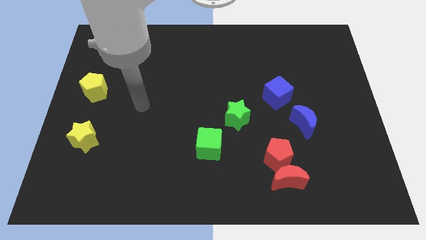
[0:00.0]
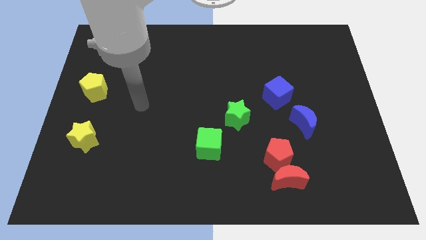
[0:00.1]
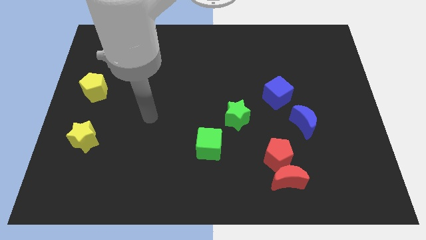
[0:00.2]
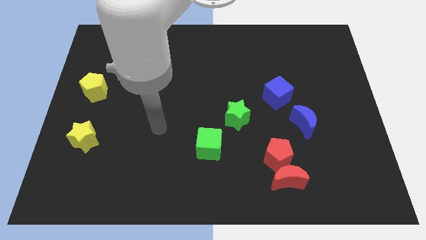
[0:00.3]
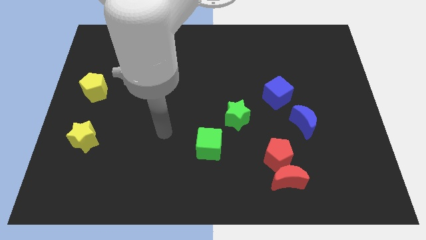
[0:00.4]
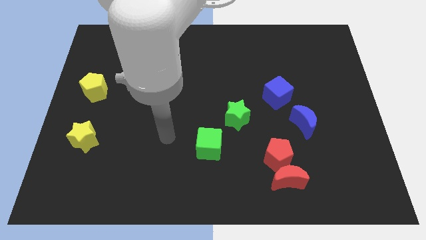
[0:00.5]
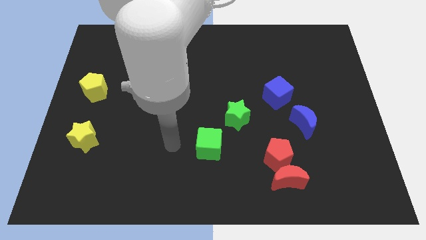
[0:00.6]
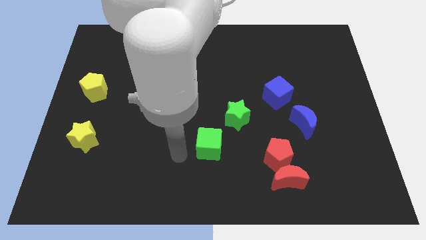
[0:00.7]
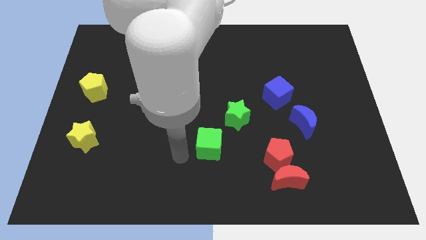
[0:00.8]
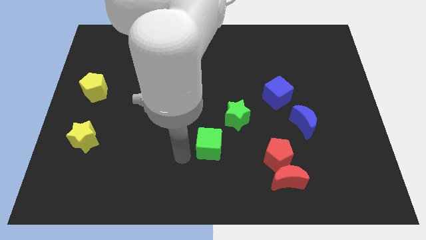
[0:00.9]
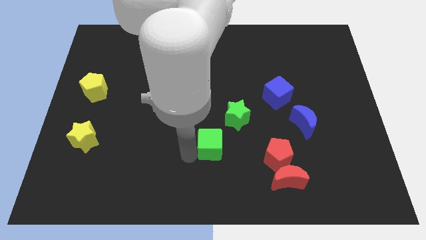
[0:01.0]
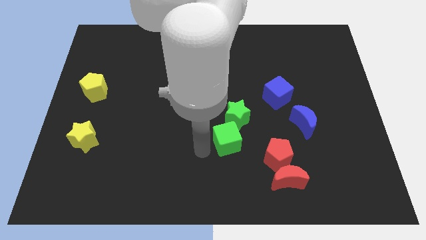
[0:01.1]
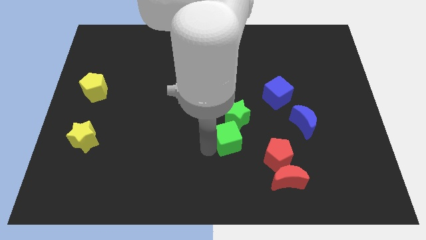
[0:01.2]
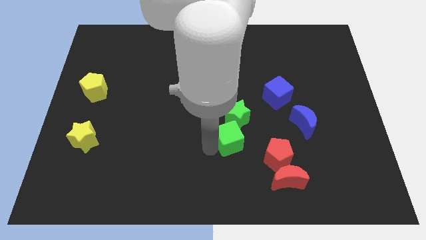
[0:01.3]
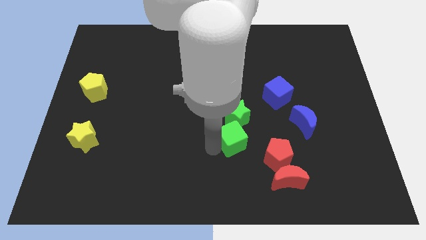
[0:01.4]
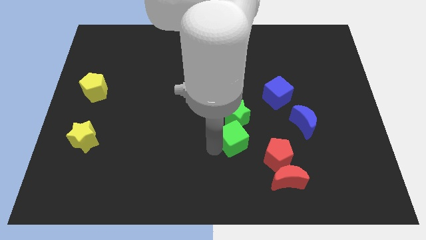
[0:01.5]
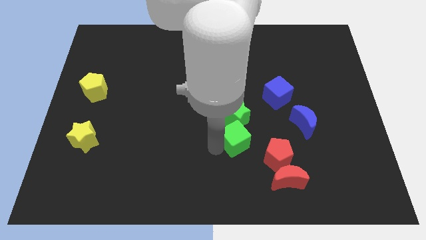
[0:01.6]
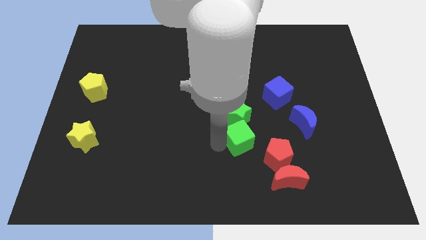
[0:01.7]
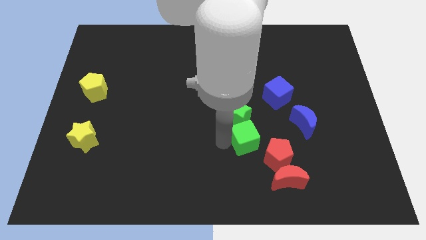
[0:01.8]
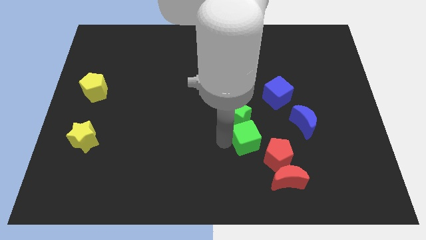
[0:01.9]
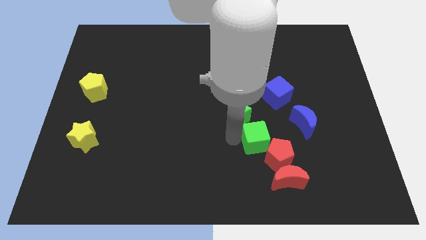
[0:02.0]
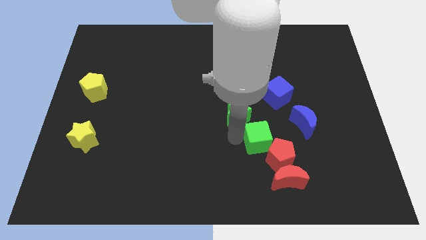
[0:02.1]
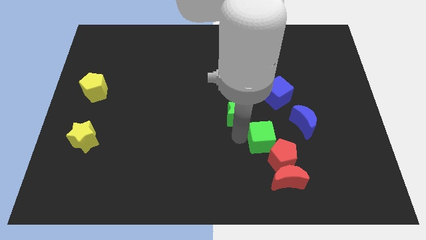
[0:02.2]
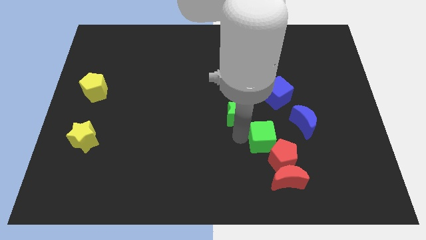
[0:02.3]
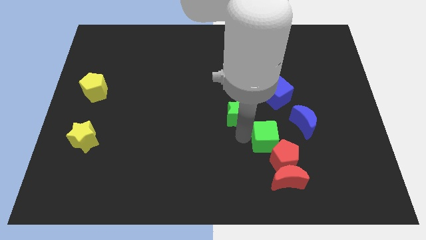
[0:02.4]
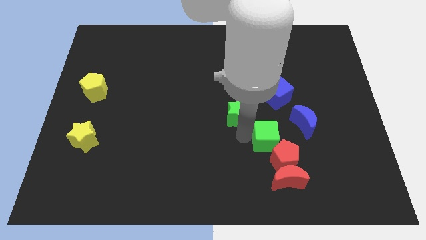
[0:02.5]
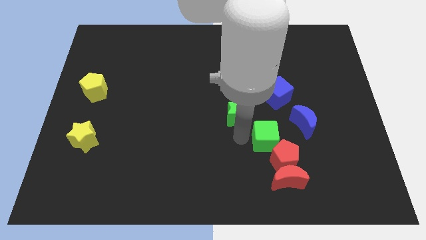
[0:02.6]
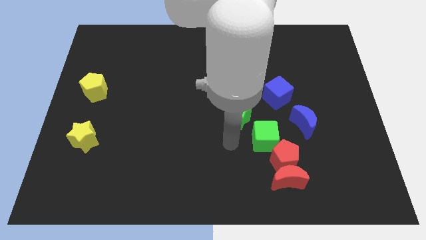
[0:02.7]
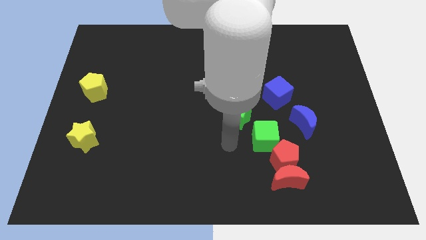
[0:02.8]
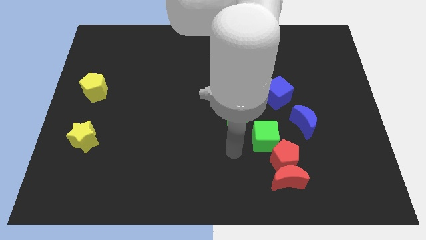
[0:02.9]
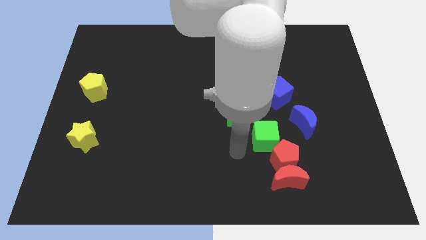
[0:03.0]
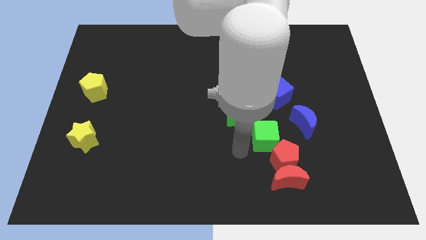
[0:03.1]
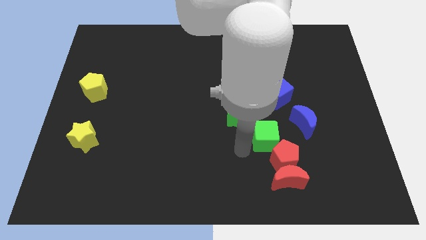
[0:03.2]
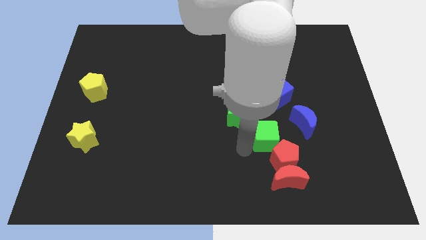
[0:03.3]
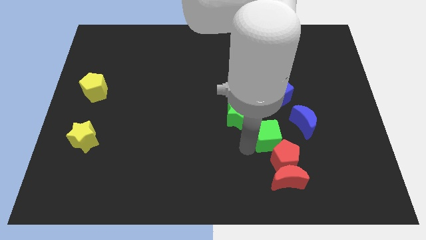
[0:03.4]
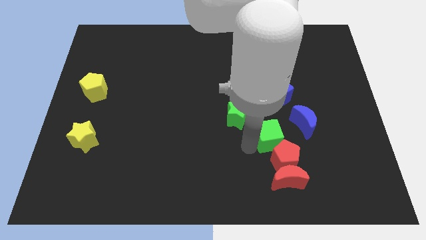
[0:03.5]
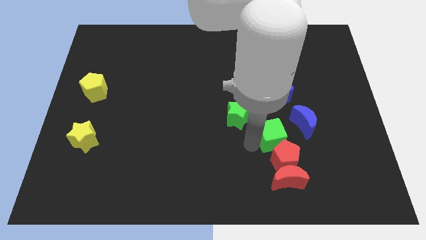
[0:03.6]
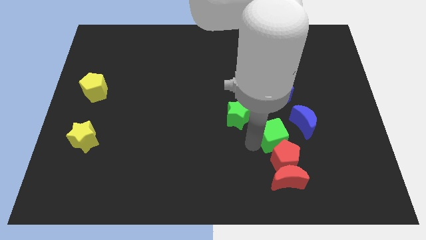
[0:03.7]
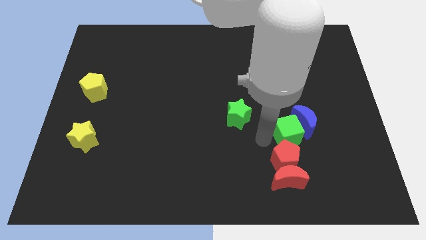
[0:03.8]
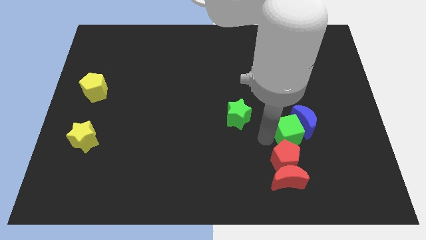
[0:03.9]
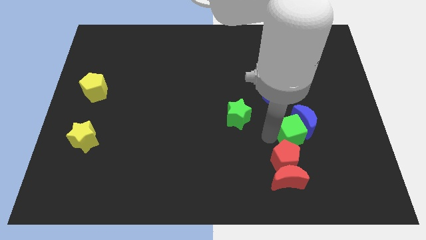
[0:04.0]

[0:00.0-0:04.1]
put the green cube to the blue moon

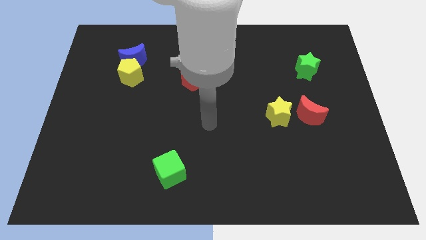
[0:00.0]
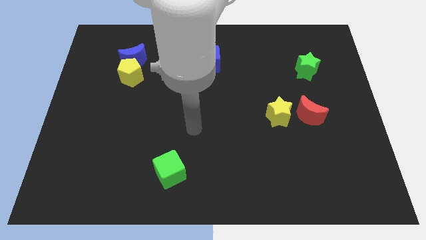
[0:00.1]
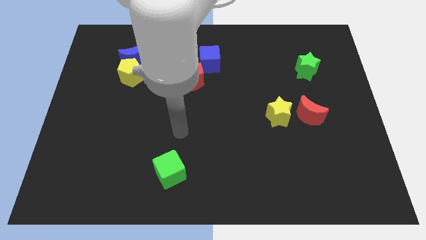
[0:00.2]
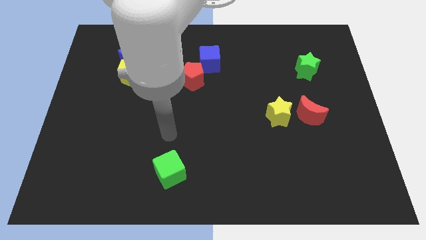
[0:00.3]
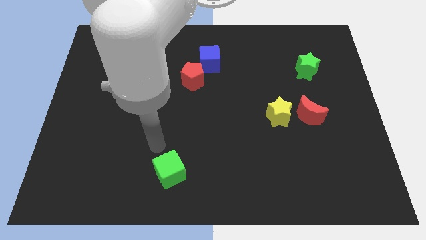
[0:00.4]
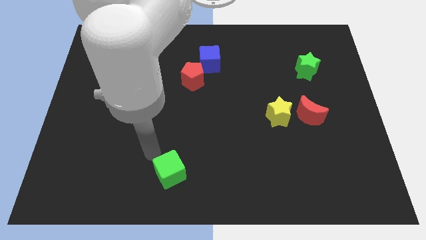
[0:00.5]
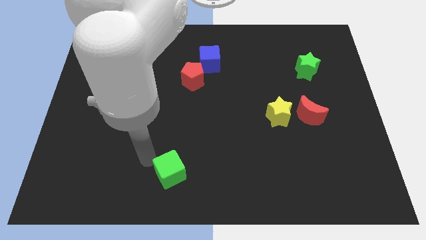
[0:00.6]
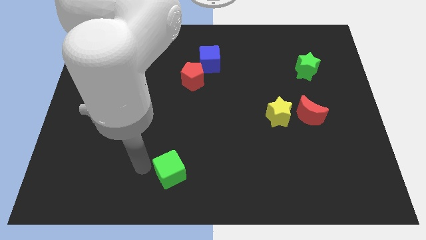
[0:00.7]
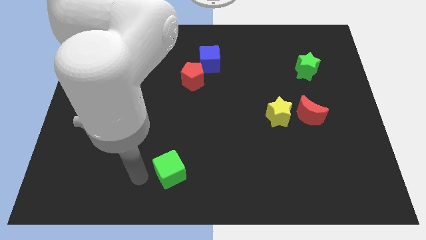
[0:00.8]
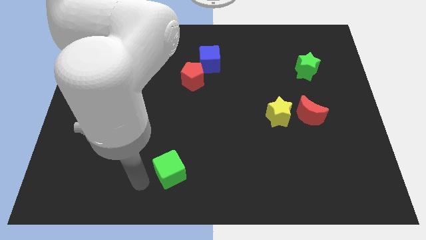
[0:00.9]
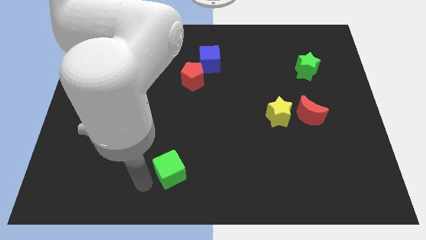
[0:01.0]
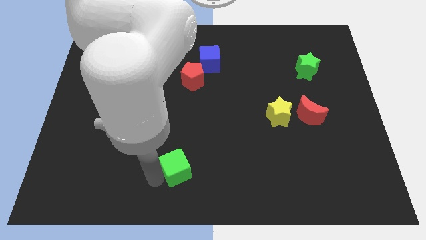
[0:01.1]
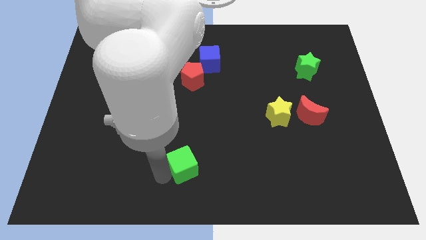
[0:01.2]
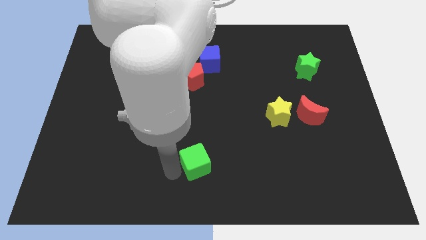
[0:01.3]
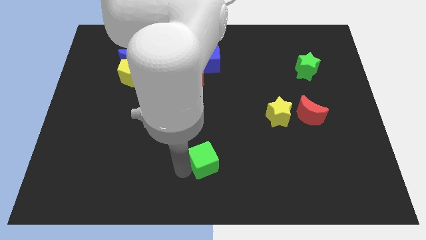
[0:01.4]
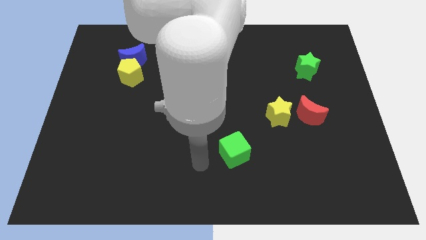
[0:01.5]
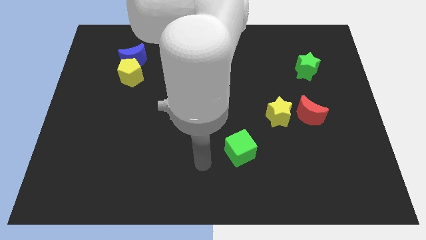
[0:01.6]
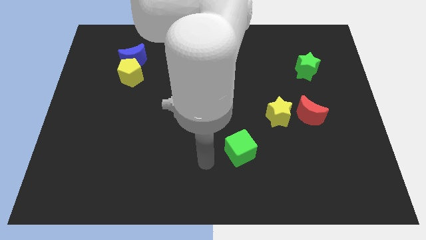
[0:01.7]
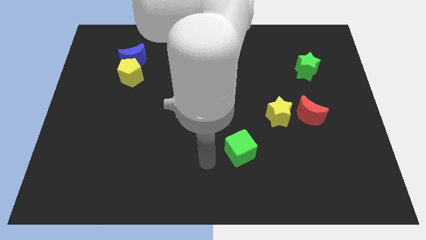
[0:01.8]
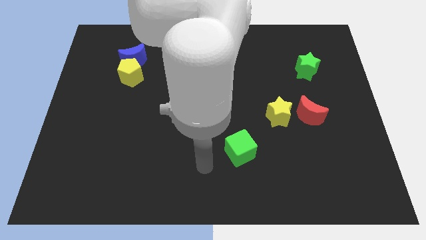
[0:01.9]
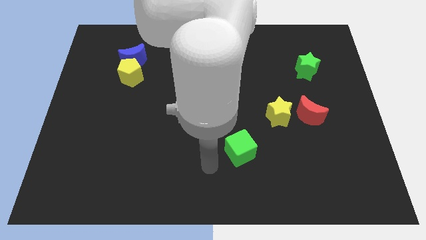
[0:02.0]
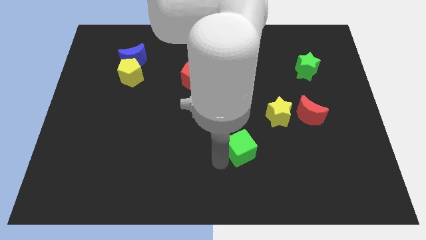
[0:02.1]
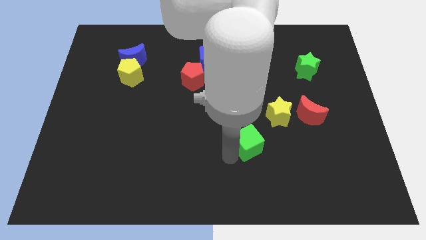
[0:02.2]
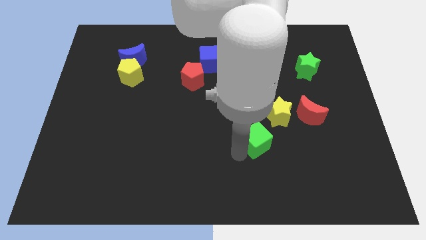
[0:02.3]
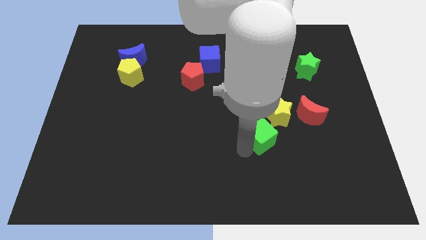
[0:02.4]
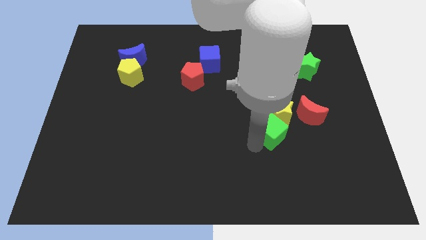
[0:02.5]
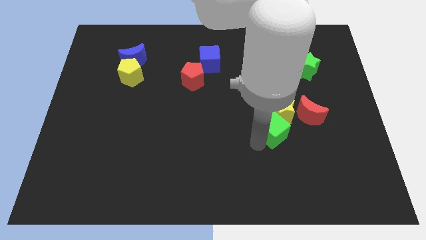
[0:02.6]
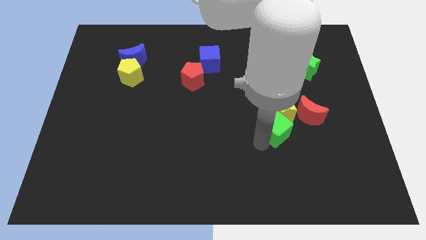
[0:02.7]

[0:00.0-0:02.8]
push the green cube close to the yellow star

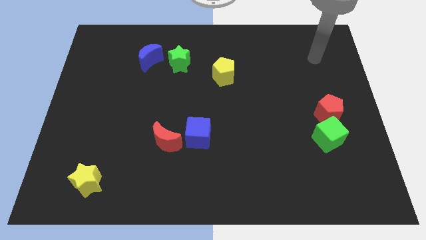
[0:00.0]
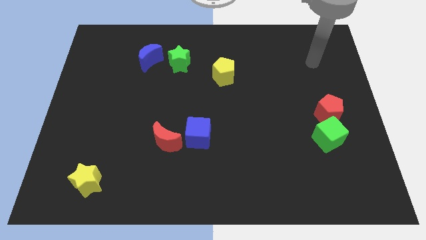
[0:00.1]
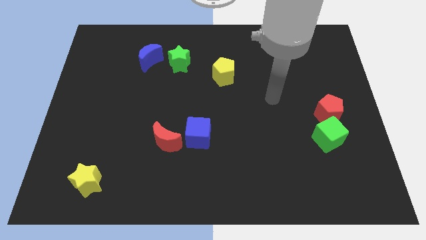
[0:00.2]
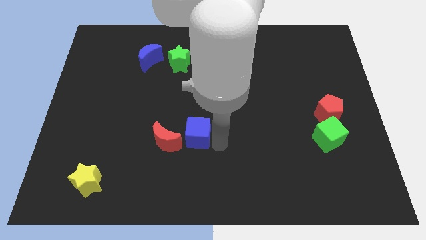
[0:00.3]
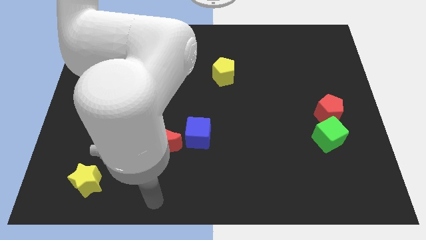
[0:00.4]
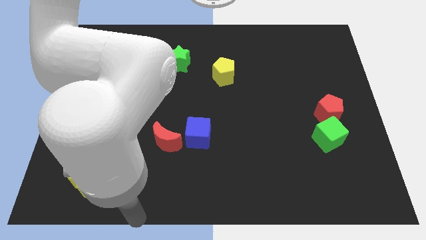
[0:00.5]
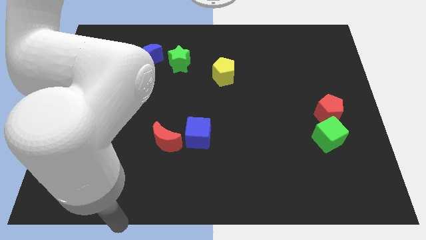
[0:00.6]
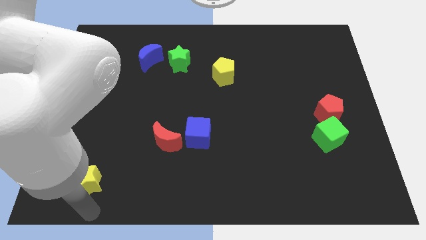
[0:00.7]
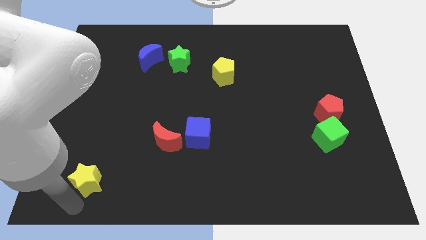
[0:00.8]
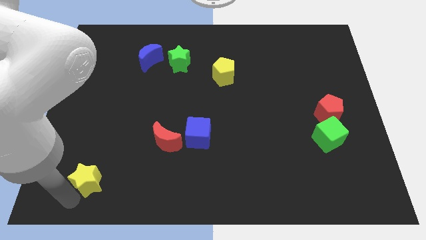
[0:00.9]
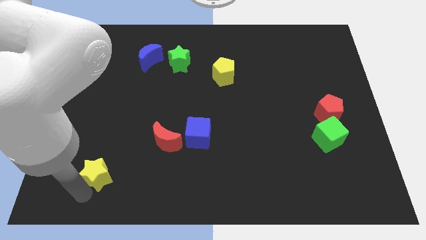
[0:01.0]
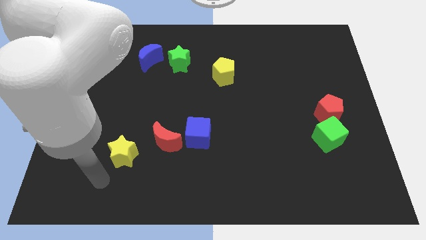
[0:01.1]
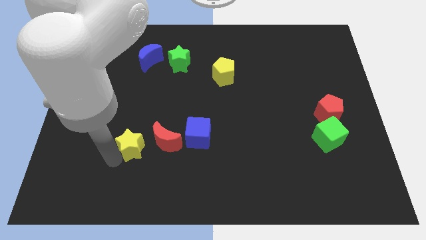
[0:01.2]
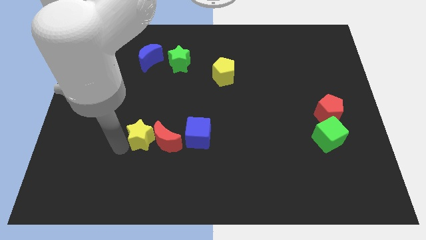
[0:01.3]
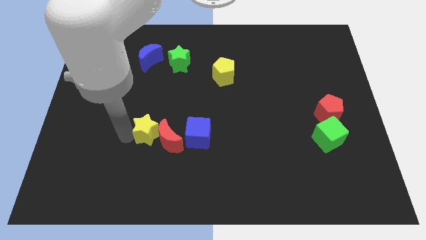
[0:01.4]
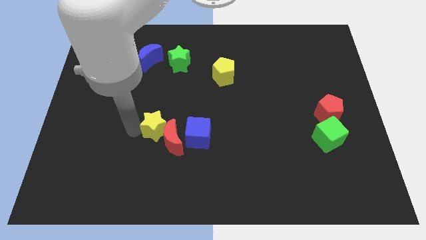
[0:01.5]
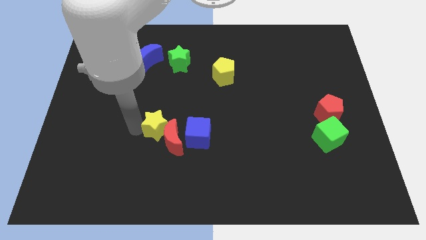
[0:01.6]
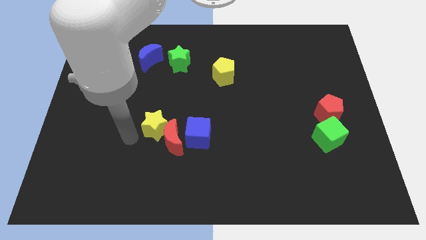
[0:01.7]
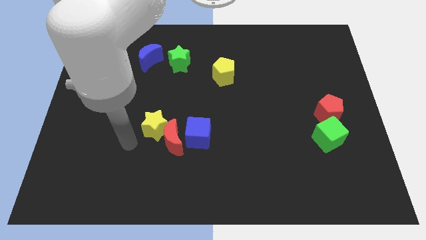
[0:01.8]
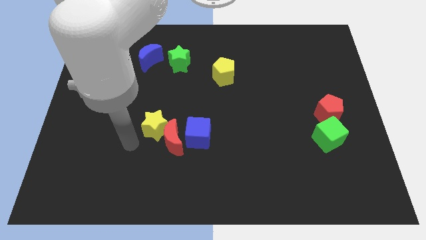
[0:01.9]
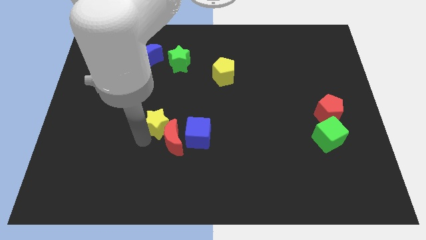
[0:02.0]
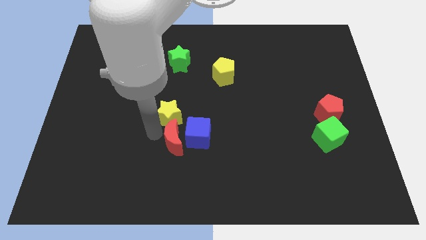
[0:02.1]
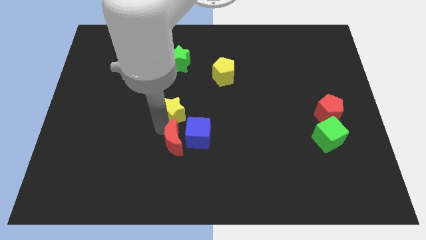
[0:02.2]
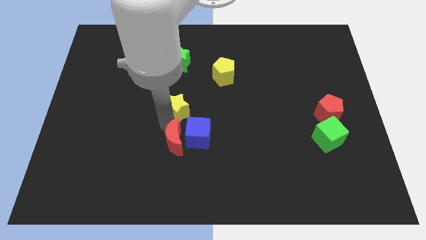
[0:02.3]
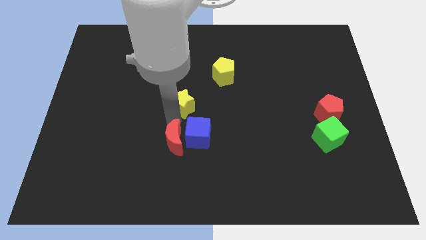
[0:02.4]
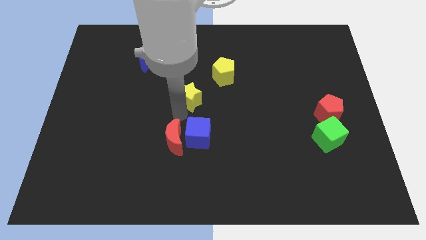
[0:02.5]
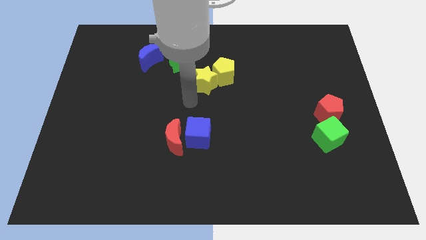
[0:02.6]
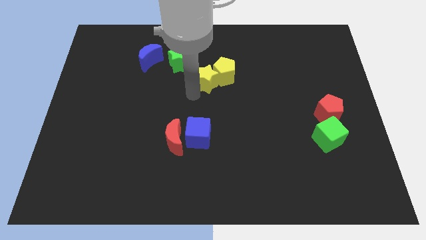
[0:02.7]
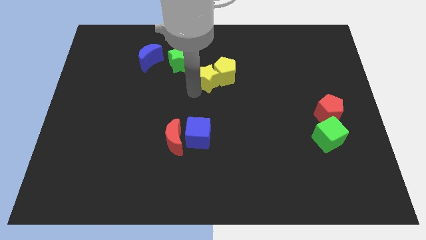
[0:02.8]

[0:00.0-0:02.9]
move the yellow star next to the yellow pentagon
